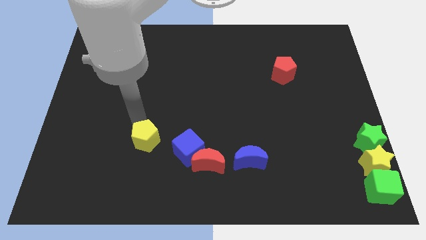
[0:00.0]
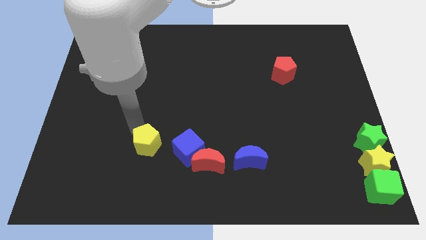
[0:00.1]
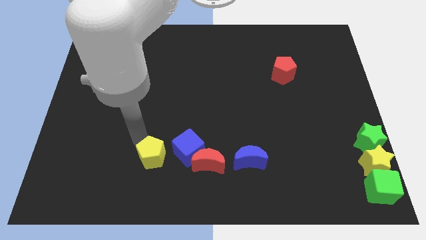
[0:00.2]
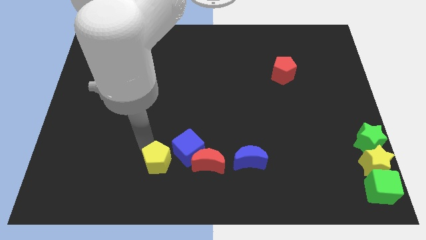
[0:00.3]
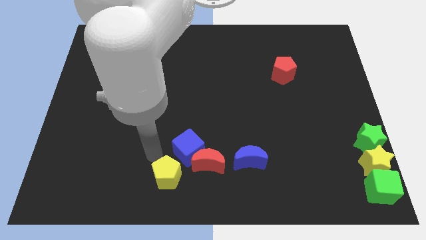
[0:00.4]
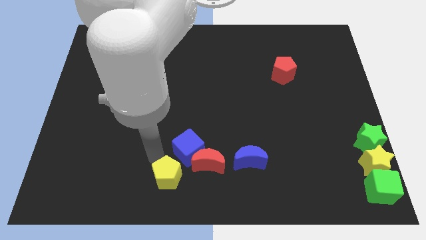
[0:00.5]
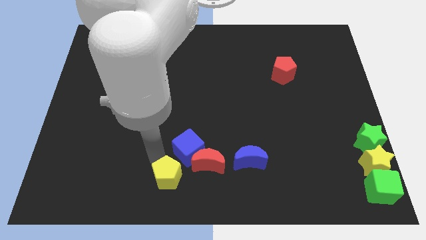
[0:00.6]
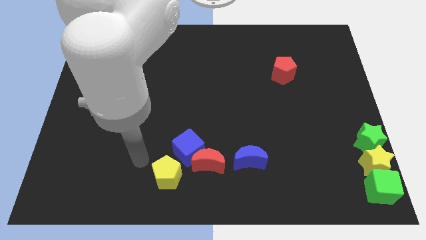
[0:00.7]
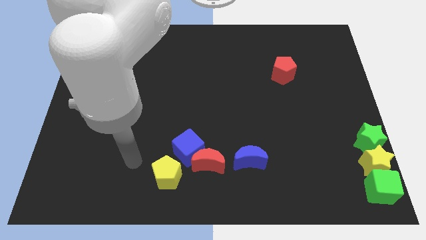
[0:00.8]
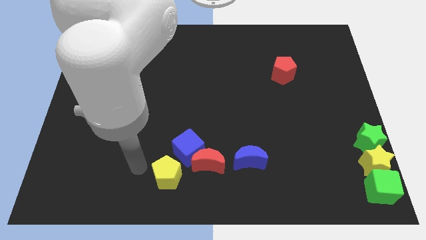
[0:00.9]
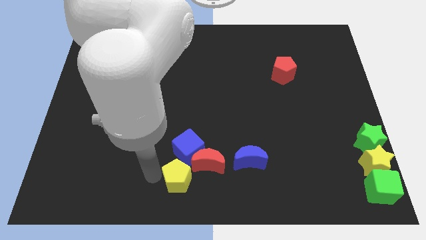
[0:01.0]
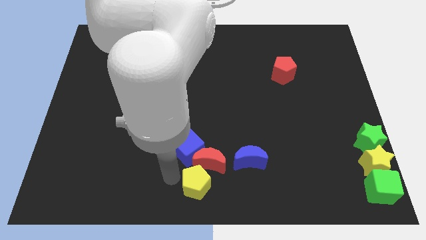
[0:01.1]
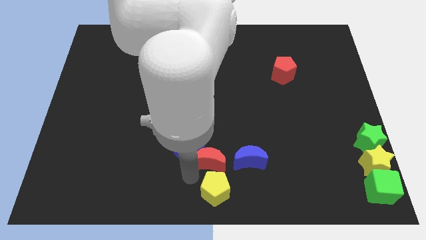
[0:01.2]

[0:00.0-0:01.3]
place the yellow pentagon to the bottom center of the board

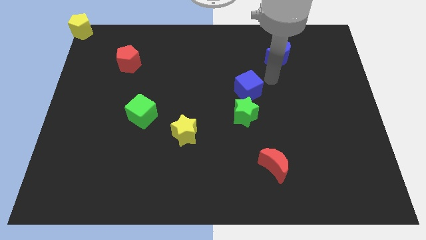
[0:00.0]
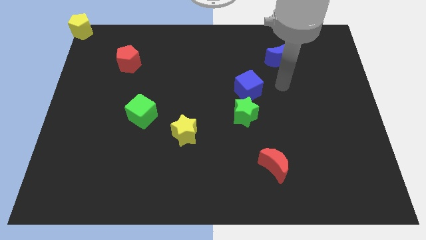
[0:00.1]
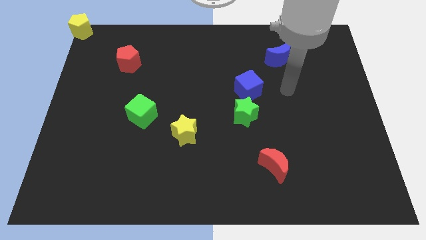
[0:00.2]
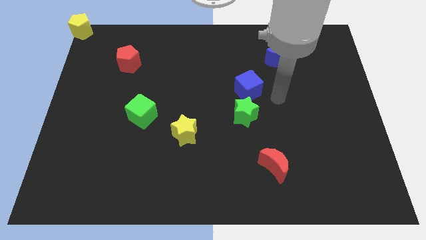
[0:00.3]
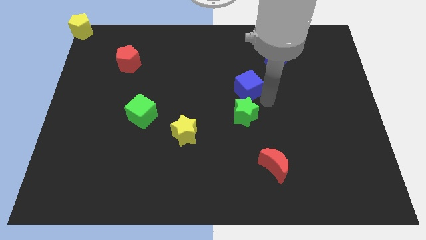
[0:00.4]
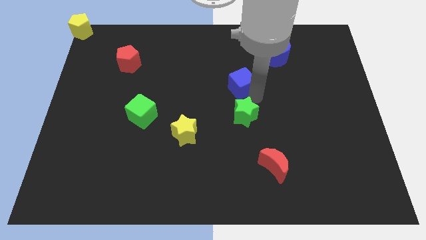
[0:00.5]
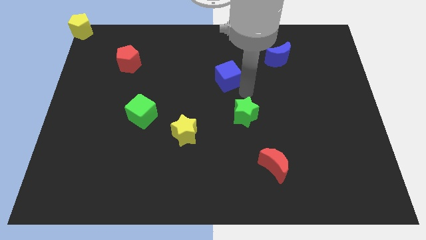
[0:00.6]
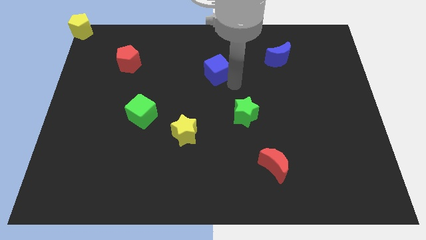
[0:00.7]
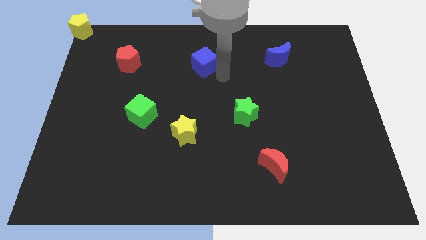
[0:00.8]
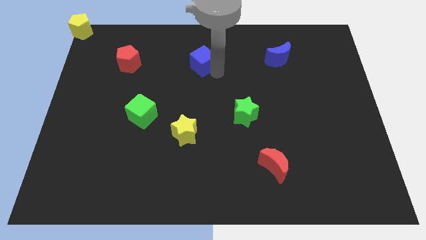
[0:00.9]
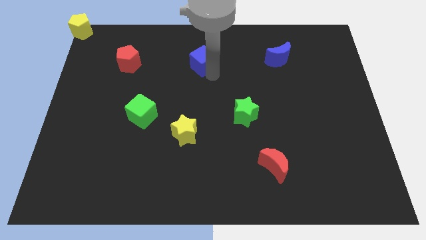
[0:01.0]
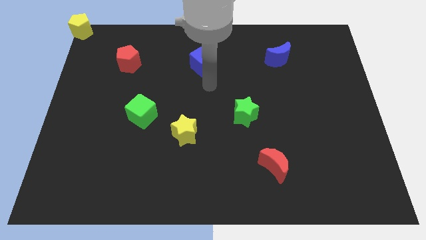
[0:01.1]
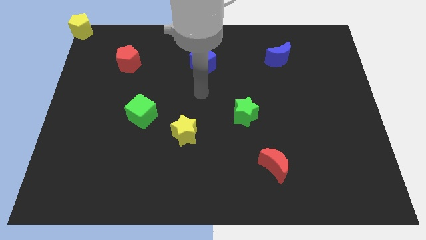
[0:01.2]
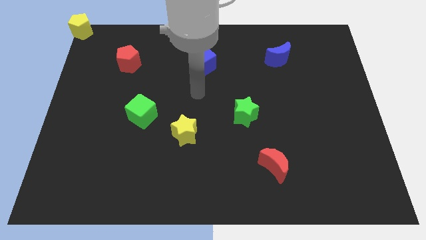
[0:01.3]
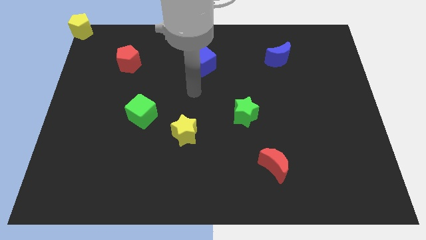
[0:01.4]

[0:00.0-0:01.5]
apart blue cube and green star

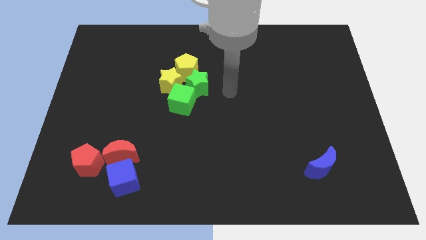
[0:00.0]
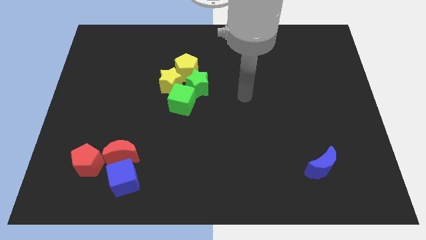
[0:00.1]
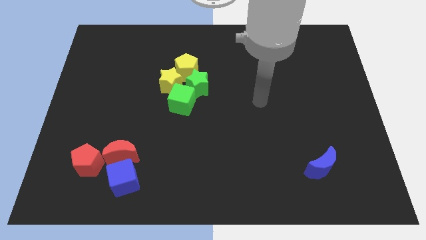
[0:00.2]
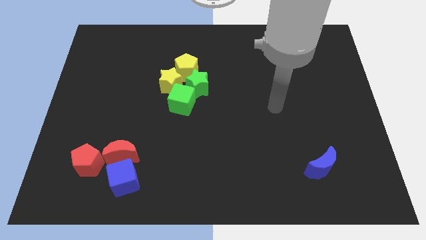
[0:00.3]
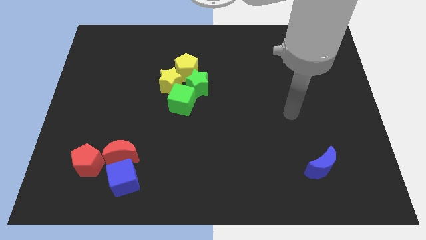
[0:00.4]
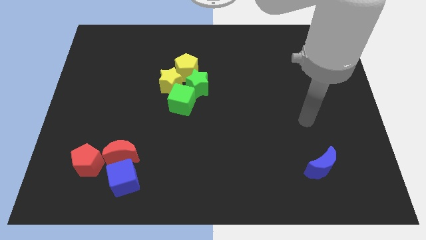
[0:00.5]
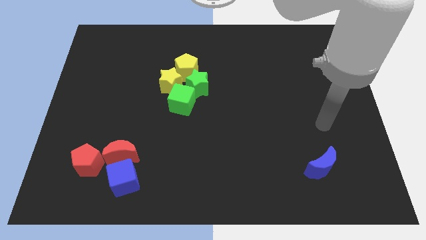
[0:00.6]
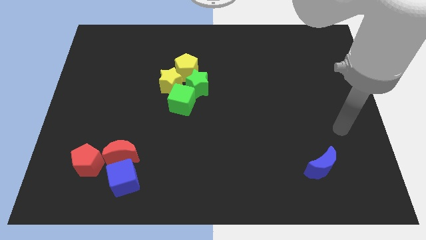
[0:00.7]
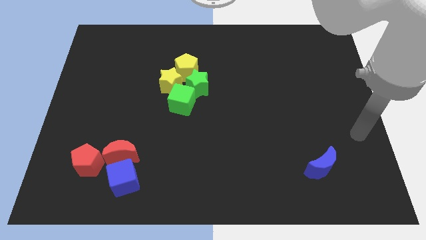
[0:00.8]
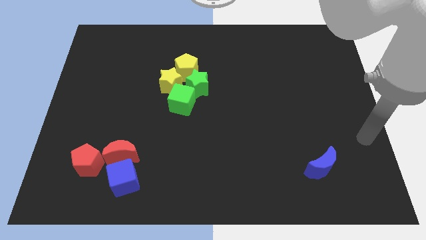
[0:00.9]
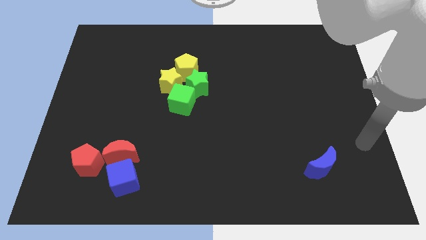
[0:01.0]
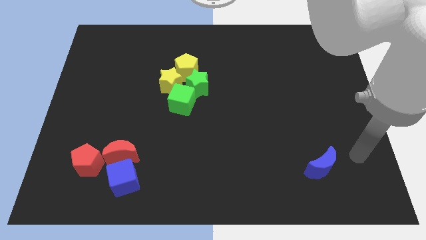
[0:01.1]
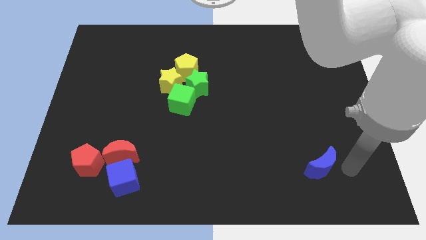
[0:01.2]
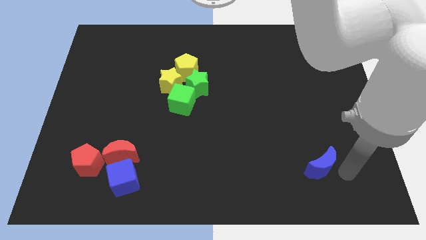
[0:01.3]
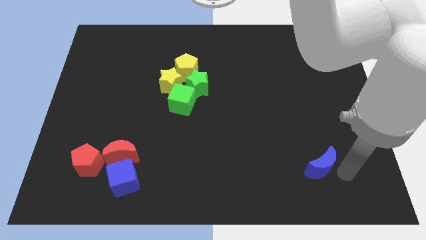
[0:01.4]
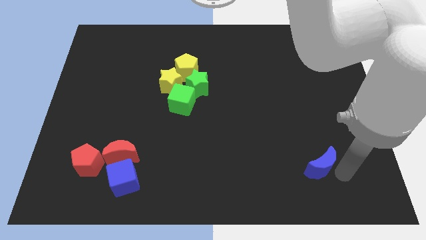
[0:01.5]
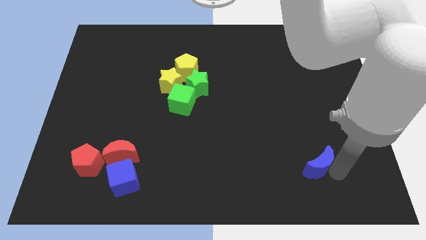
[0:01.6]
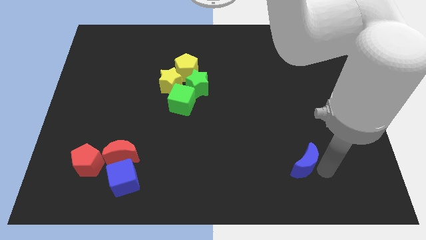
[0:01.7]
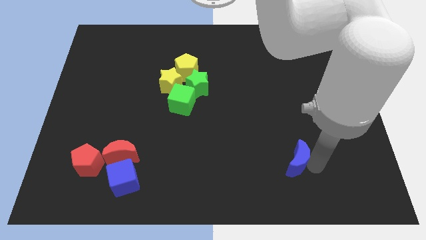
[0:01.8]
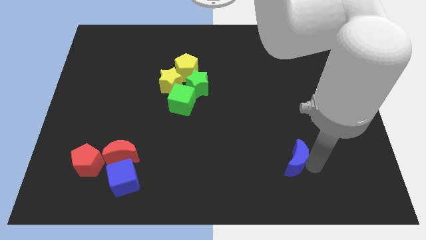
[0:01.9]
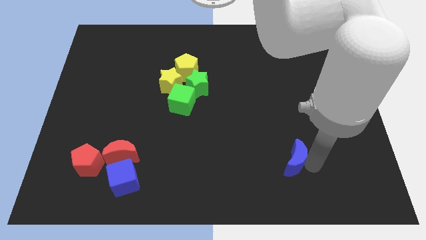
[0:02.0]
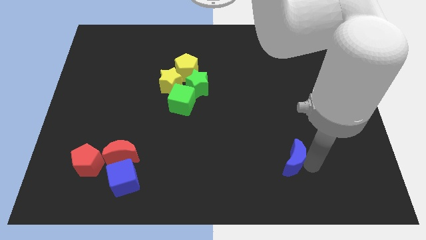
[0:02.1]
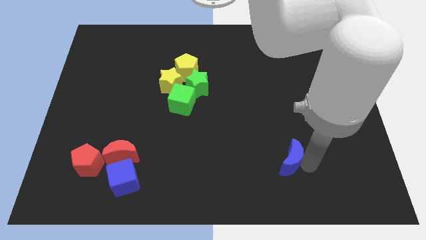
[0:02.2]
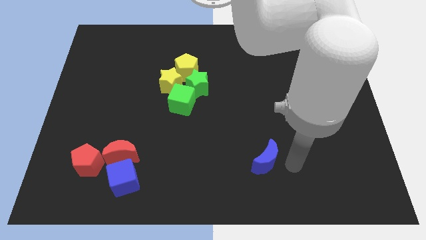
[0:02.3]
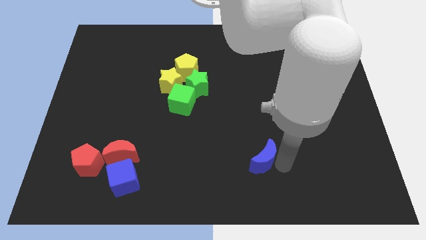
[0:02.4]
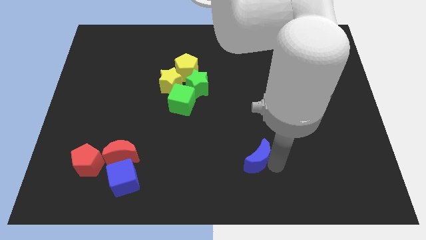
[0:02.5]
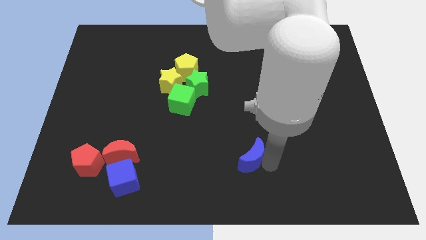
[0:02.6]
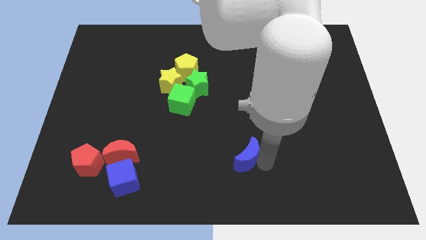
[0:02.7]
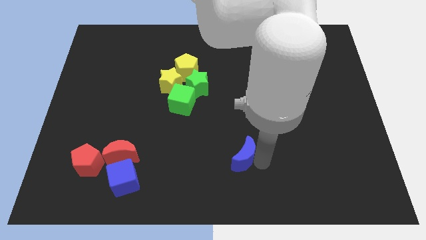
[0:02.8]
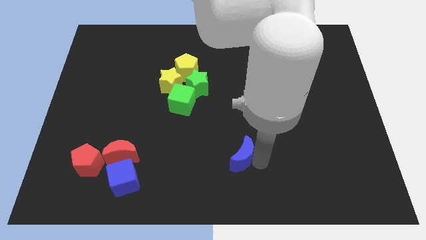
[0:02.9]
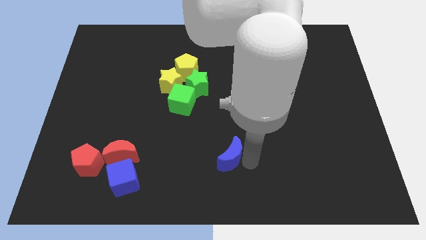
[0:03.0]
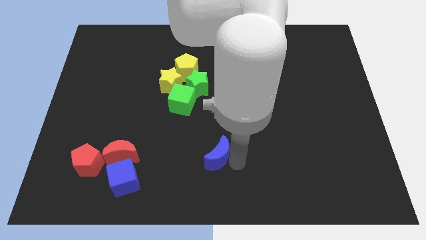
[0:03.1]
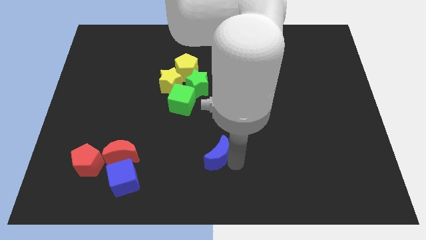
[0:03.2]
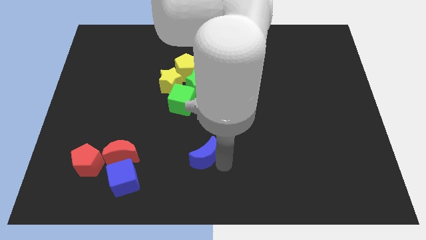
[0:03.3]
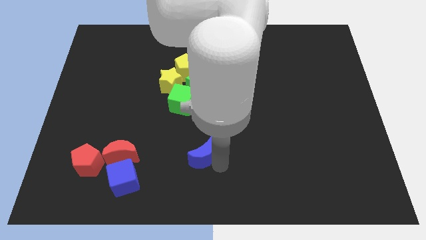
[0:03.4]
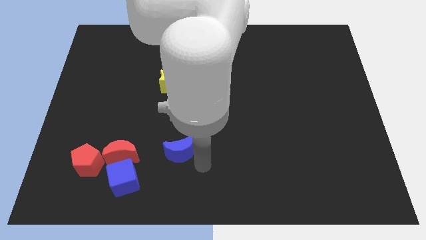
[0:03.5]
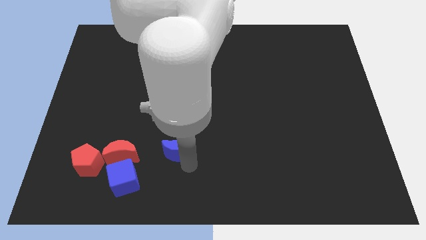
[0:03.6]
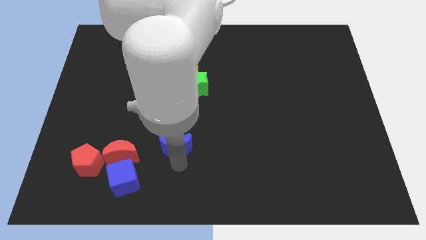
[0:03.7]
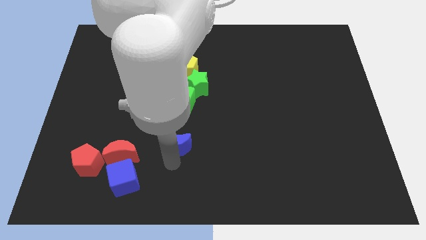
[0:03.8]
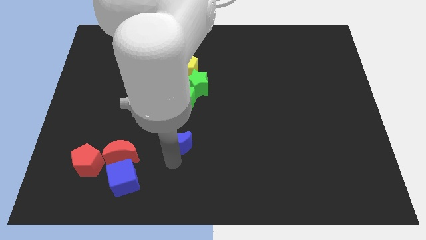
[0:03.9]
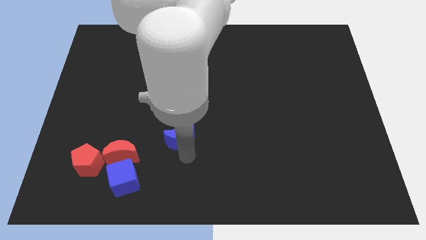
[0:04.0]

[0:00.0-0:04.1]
move the blue crescent to the bottom of the green cube

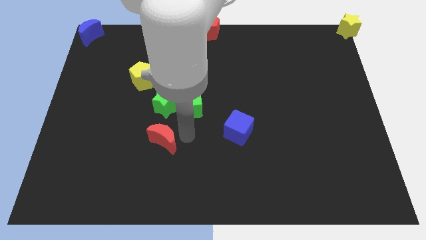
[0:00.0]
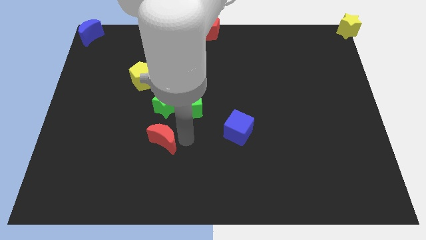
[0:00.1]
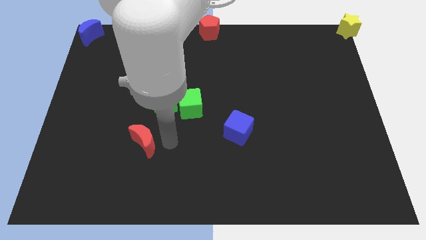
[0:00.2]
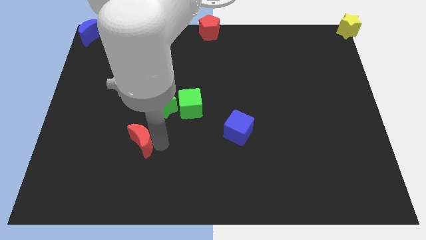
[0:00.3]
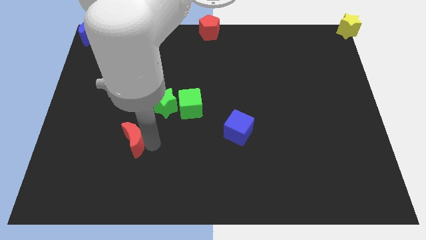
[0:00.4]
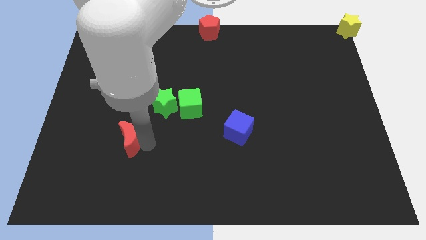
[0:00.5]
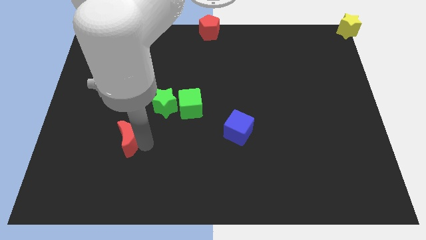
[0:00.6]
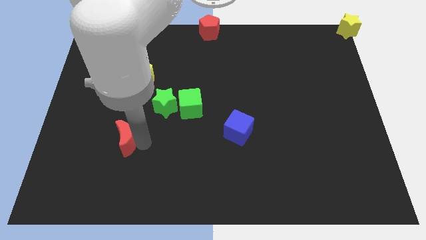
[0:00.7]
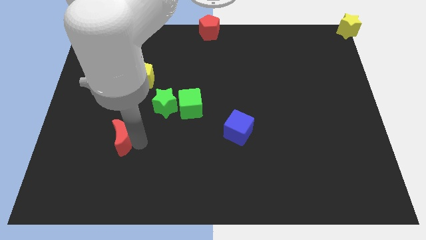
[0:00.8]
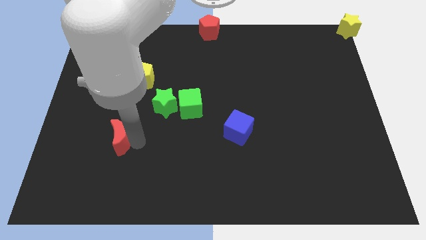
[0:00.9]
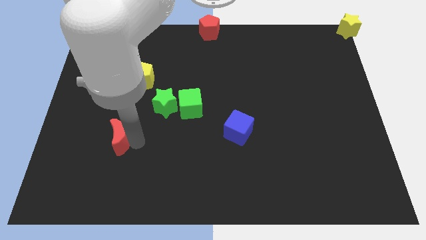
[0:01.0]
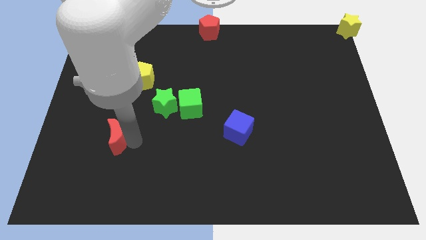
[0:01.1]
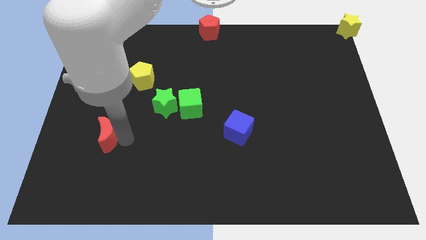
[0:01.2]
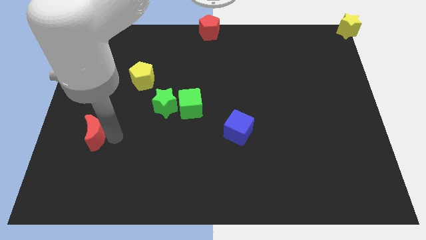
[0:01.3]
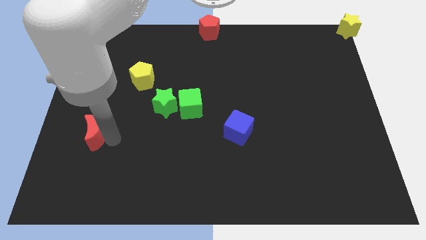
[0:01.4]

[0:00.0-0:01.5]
move the red moon diagonally to the yellow pentagon

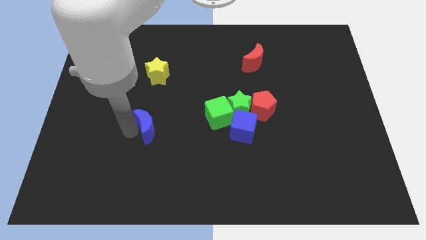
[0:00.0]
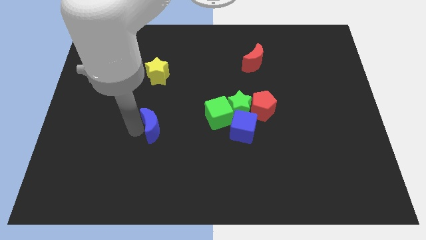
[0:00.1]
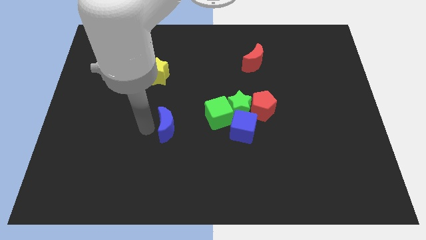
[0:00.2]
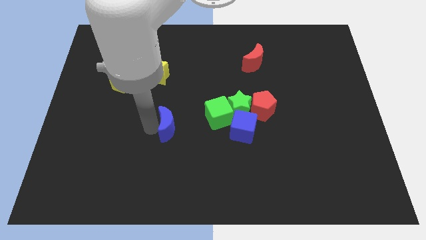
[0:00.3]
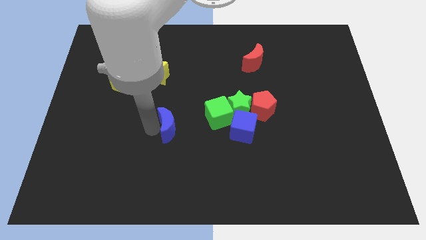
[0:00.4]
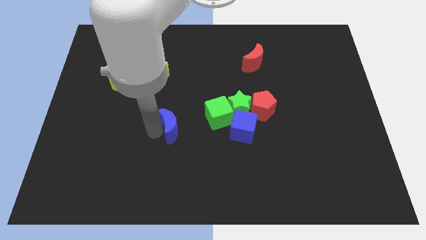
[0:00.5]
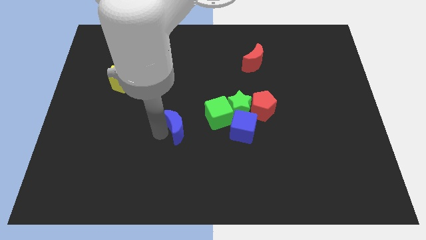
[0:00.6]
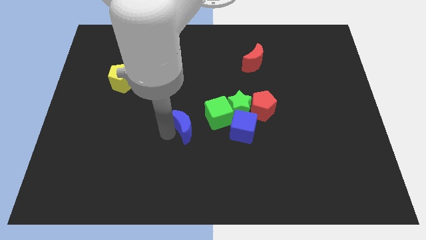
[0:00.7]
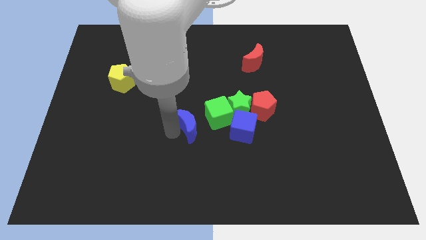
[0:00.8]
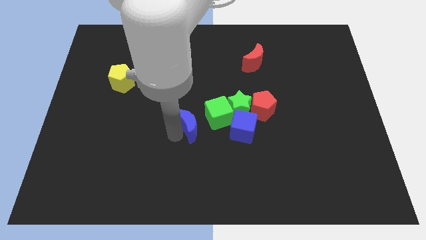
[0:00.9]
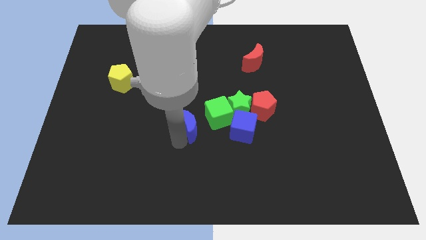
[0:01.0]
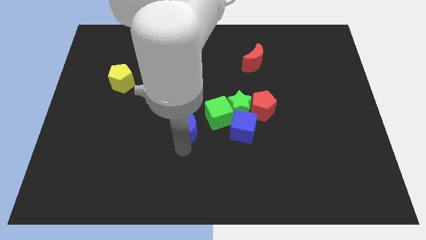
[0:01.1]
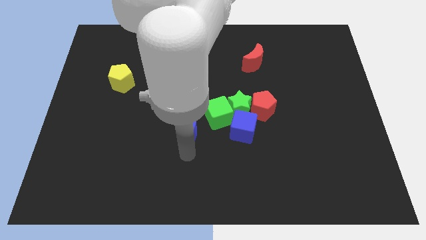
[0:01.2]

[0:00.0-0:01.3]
push the blue crescent to the center of the board
